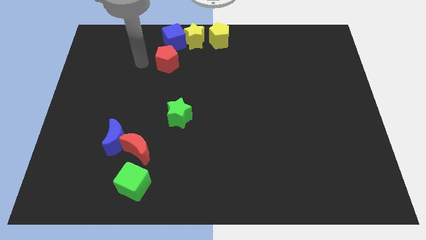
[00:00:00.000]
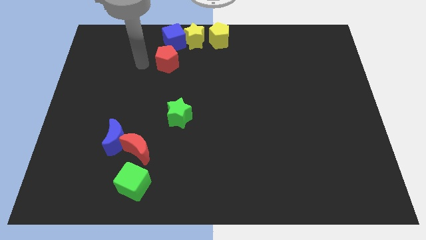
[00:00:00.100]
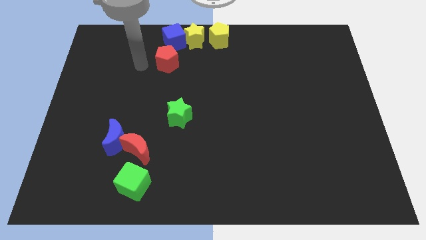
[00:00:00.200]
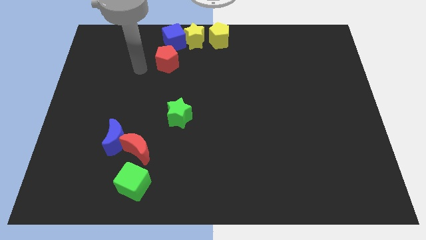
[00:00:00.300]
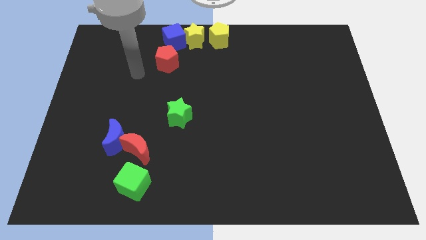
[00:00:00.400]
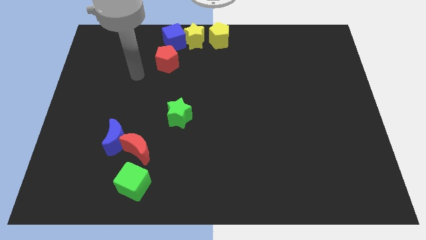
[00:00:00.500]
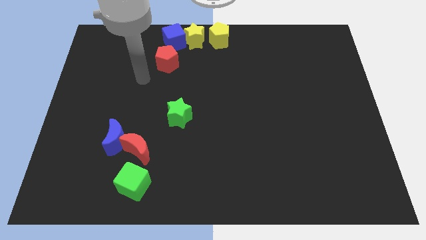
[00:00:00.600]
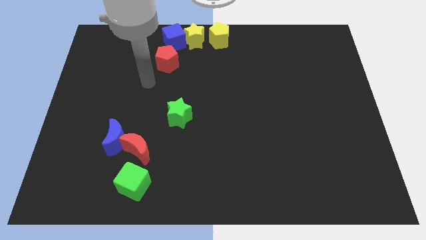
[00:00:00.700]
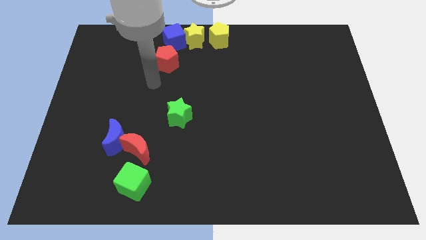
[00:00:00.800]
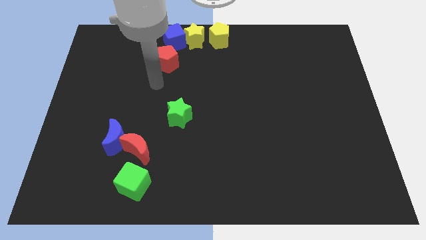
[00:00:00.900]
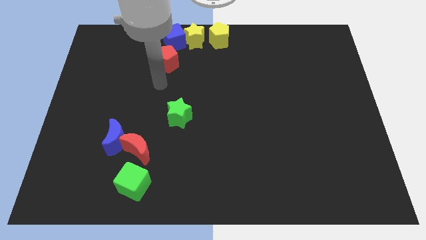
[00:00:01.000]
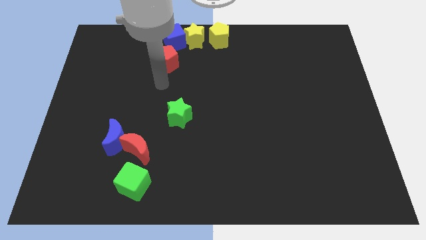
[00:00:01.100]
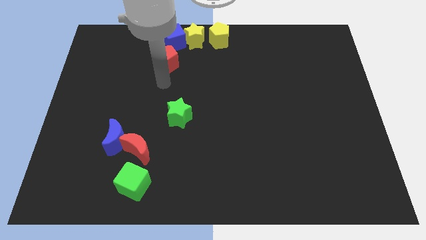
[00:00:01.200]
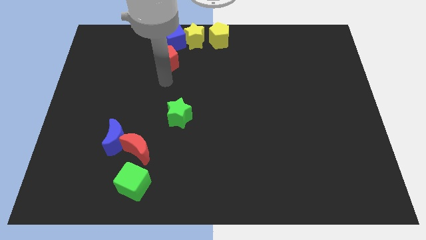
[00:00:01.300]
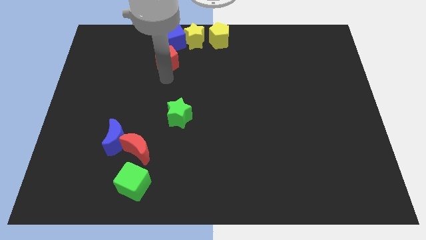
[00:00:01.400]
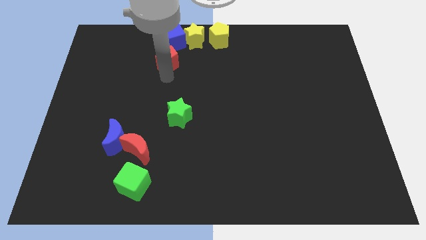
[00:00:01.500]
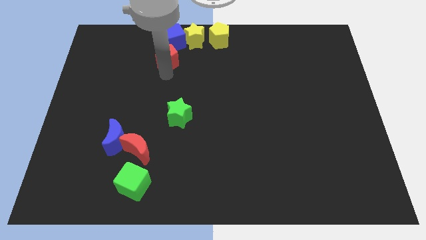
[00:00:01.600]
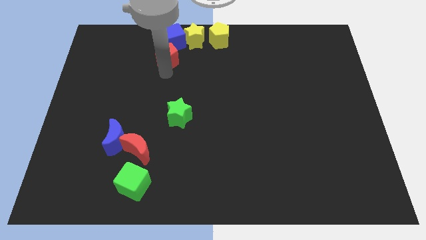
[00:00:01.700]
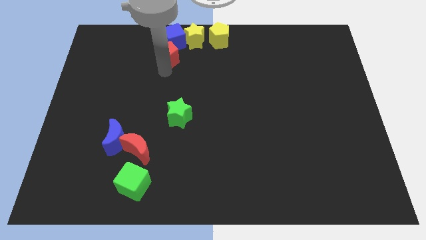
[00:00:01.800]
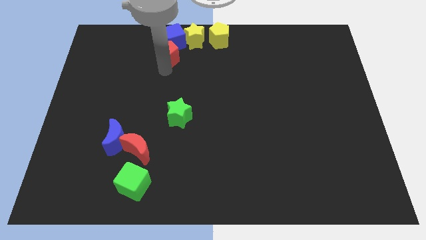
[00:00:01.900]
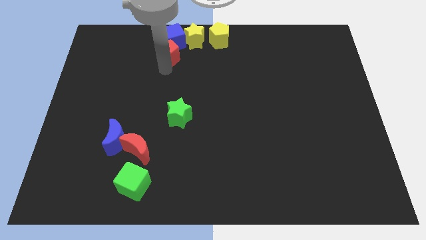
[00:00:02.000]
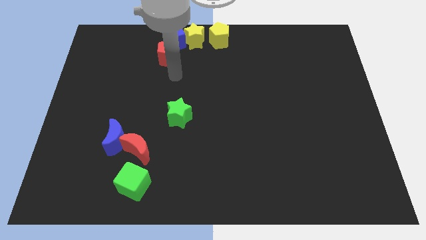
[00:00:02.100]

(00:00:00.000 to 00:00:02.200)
move the red pentagon into the blue cube

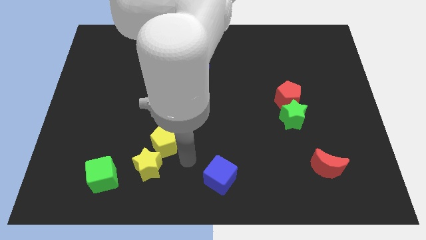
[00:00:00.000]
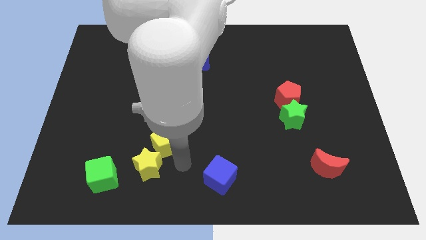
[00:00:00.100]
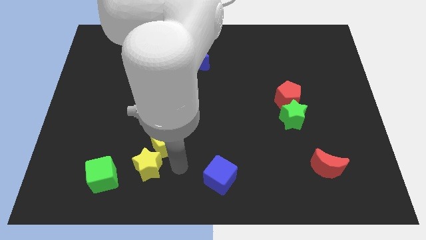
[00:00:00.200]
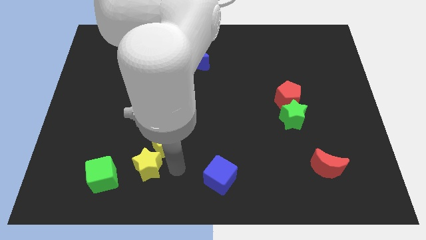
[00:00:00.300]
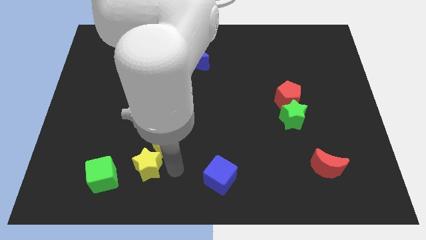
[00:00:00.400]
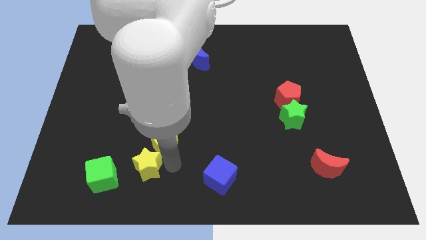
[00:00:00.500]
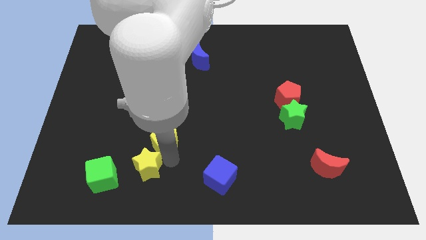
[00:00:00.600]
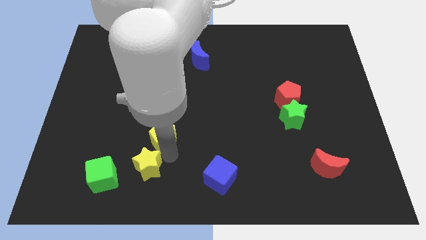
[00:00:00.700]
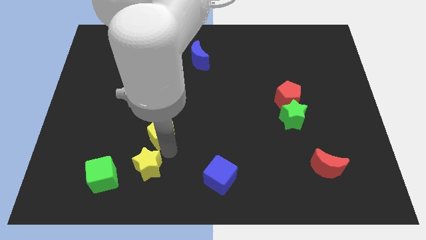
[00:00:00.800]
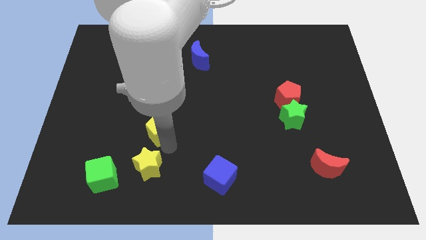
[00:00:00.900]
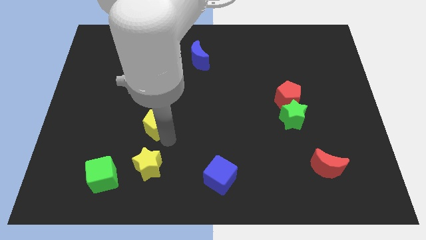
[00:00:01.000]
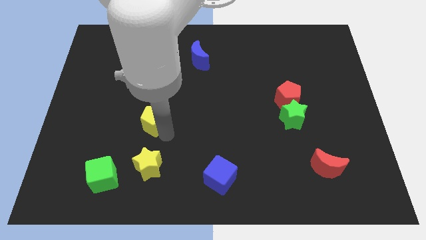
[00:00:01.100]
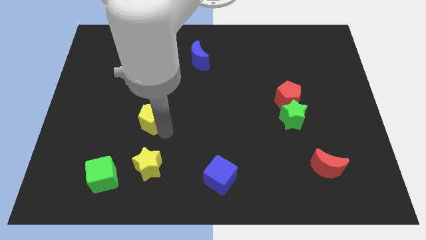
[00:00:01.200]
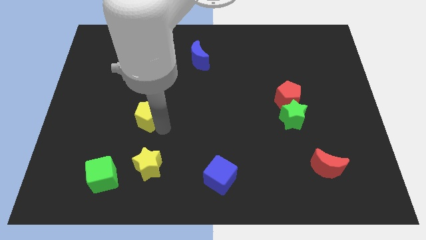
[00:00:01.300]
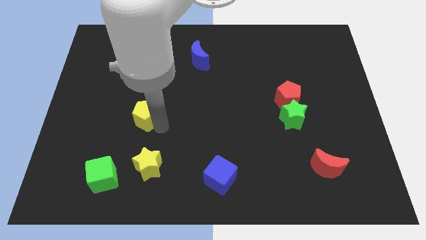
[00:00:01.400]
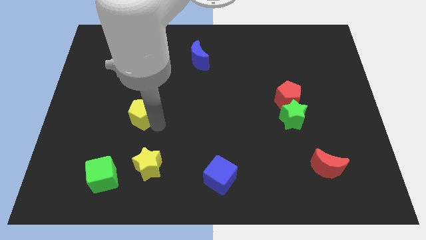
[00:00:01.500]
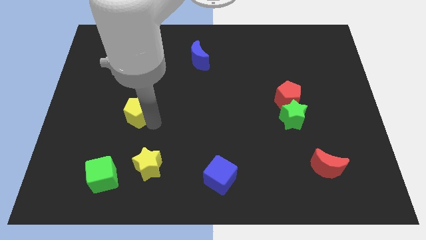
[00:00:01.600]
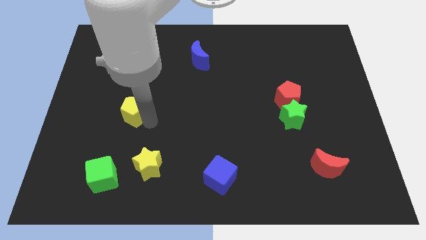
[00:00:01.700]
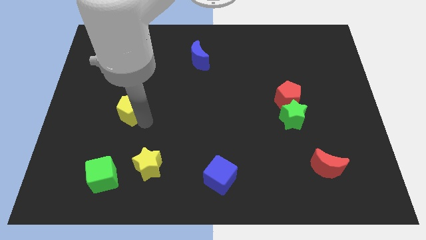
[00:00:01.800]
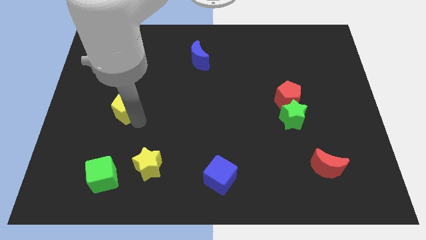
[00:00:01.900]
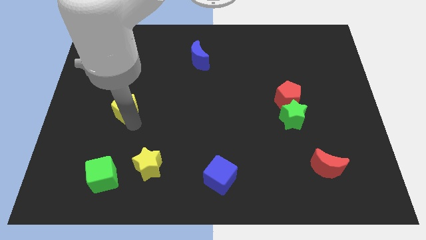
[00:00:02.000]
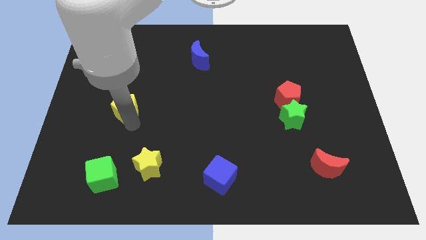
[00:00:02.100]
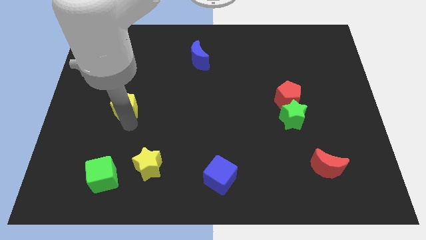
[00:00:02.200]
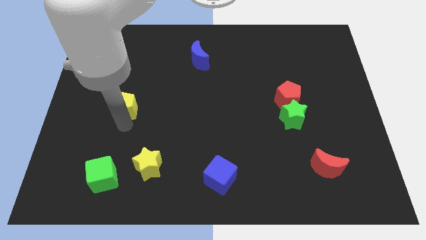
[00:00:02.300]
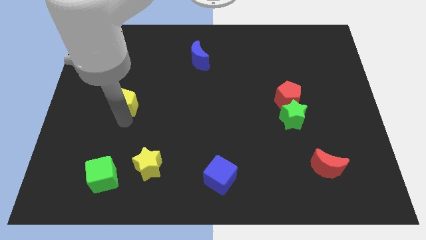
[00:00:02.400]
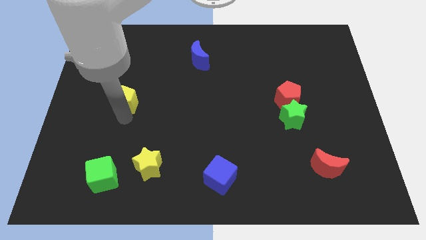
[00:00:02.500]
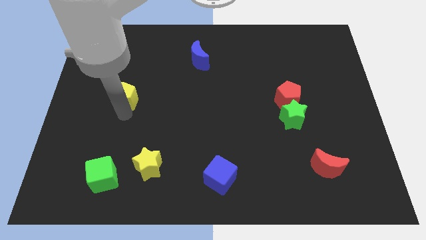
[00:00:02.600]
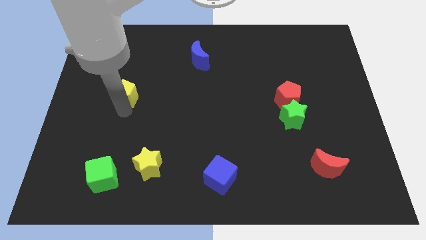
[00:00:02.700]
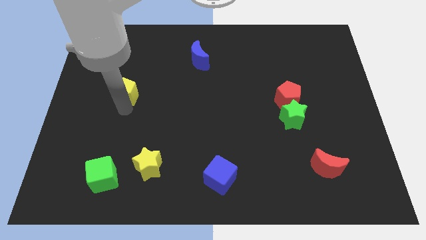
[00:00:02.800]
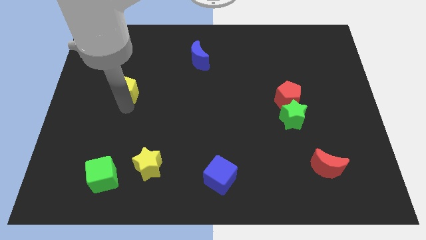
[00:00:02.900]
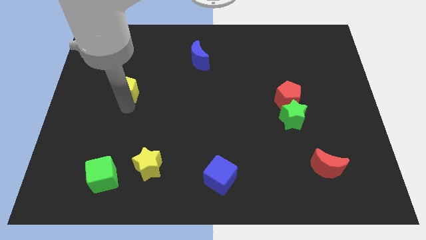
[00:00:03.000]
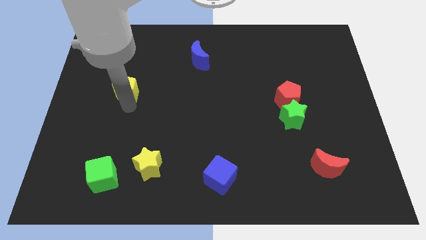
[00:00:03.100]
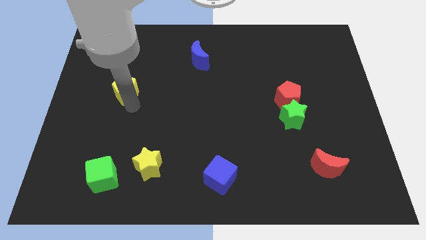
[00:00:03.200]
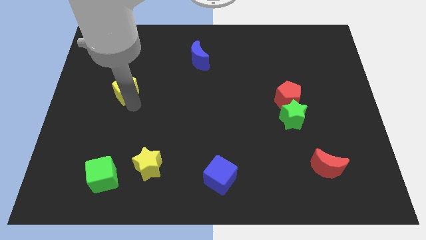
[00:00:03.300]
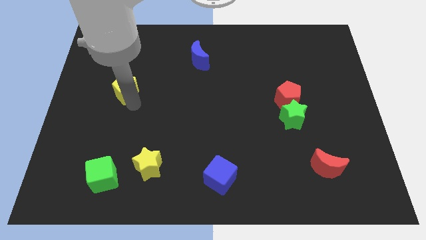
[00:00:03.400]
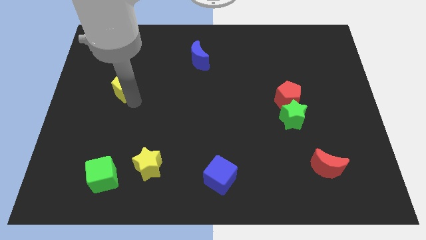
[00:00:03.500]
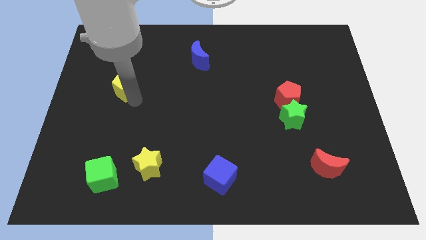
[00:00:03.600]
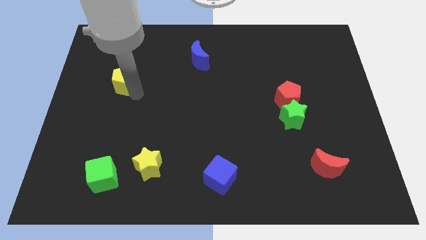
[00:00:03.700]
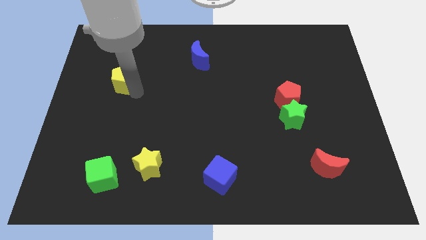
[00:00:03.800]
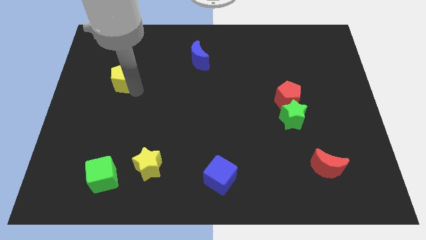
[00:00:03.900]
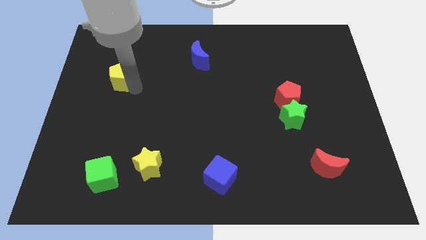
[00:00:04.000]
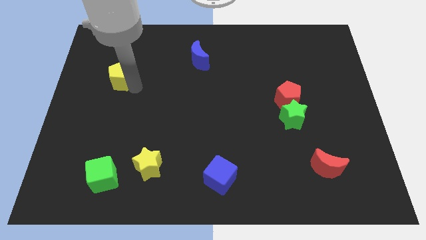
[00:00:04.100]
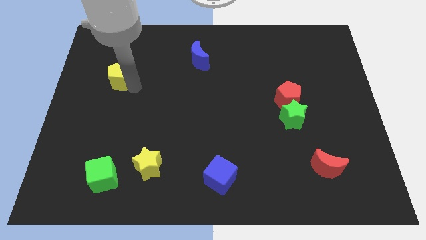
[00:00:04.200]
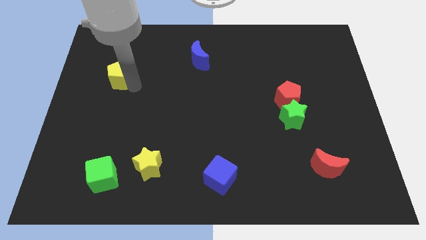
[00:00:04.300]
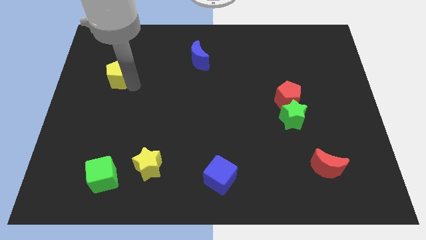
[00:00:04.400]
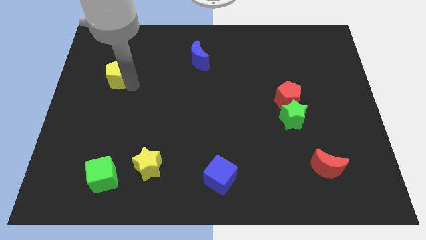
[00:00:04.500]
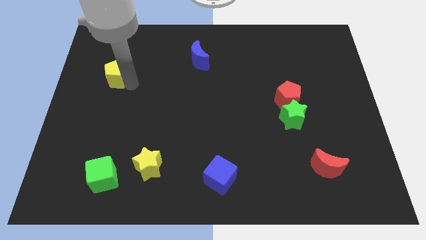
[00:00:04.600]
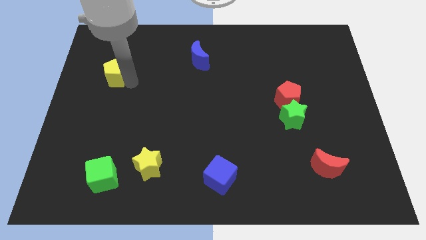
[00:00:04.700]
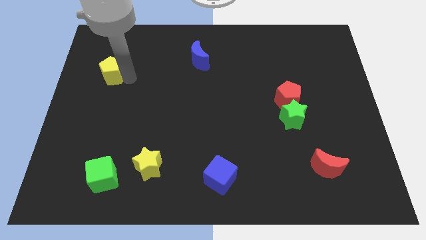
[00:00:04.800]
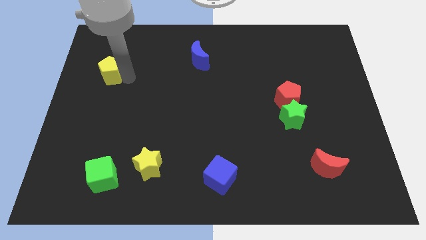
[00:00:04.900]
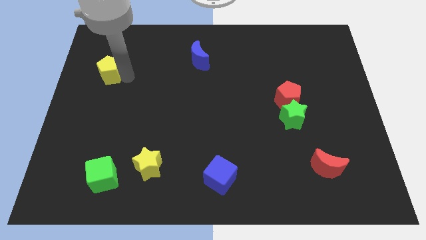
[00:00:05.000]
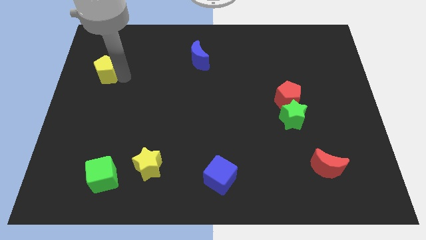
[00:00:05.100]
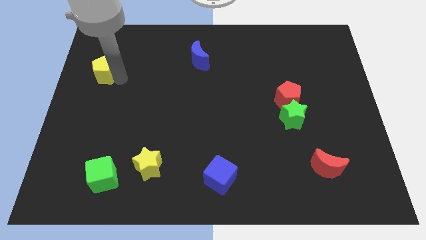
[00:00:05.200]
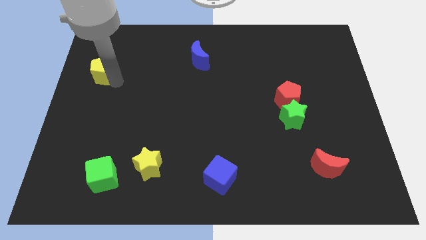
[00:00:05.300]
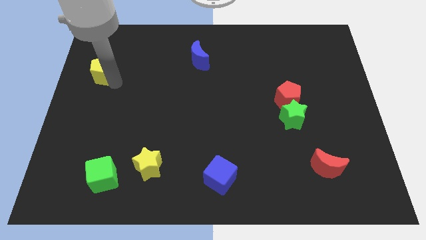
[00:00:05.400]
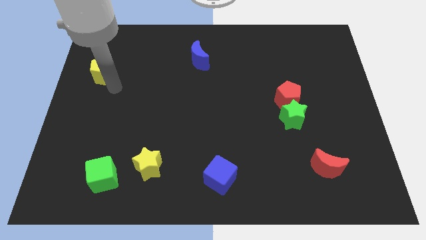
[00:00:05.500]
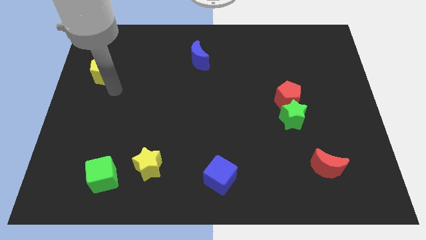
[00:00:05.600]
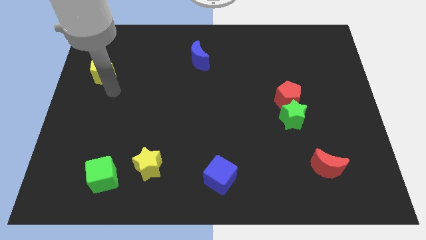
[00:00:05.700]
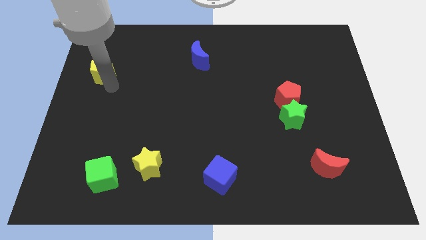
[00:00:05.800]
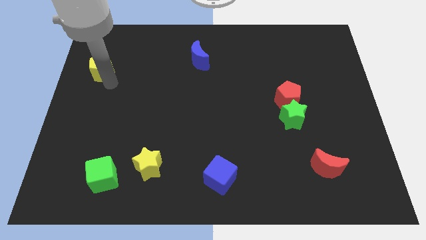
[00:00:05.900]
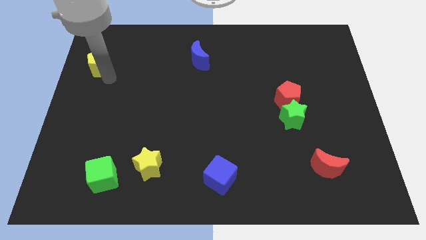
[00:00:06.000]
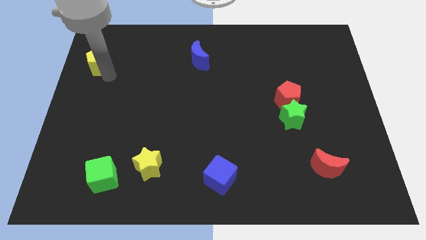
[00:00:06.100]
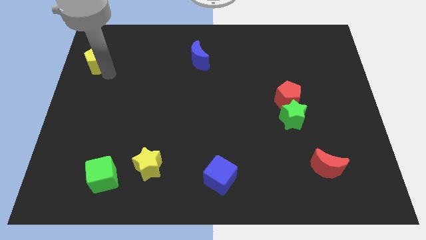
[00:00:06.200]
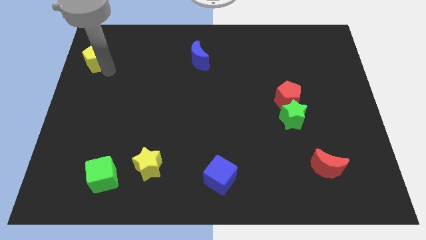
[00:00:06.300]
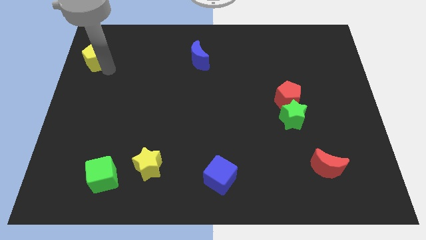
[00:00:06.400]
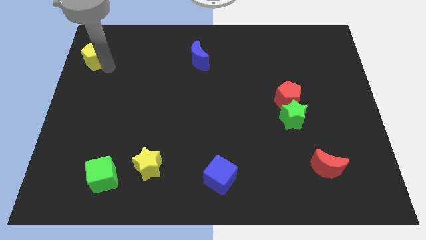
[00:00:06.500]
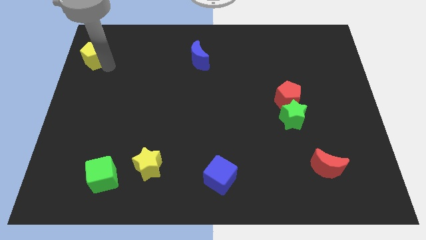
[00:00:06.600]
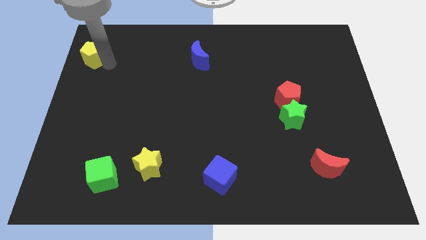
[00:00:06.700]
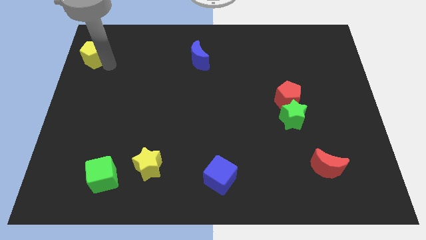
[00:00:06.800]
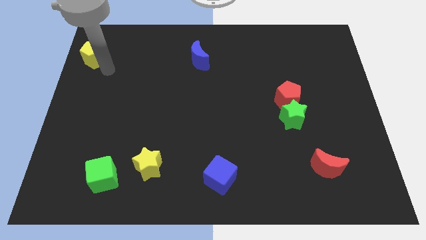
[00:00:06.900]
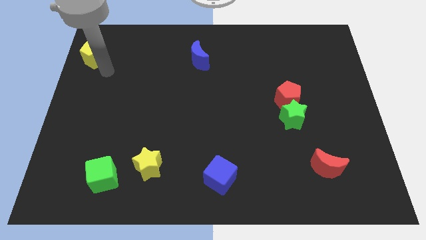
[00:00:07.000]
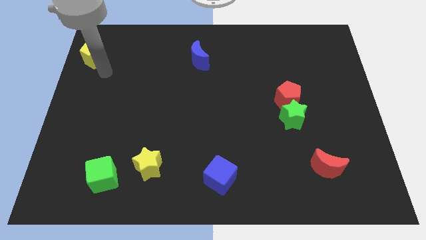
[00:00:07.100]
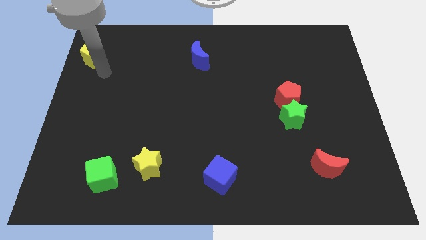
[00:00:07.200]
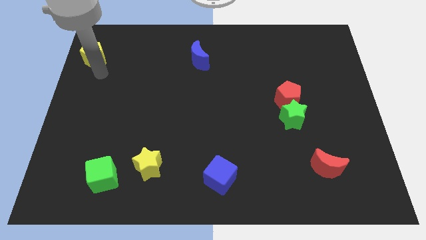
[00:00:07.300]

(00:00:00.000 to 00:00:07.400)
place the yellow pentagon to the left of the blue crescent
